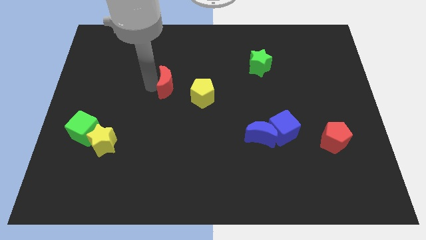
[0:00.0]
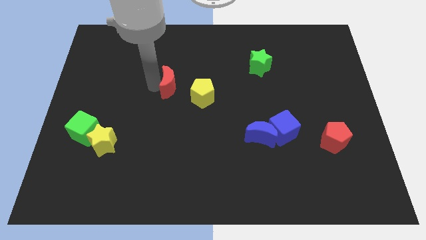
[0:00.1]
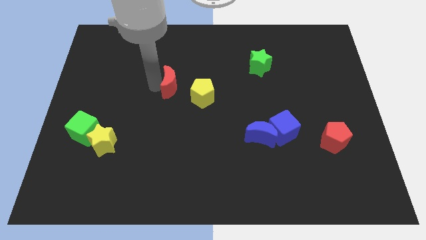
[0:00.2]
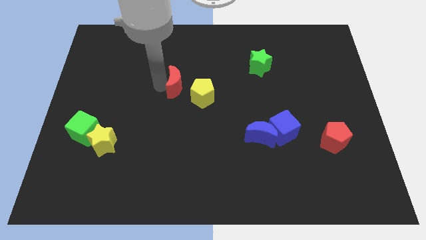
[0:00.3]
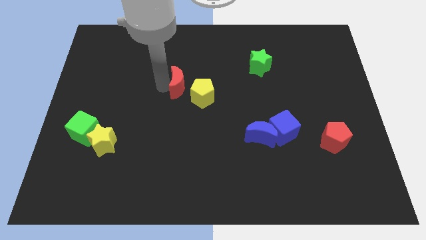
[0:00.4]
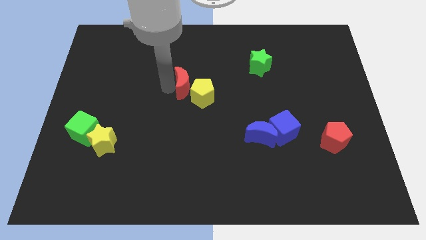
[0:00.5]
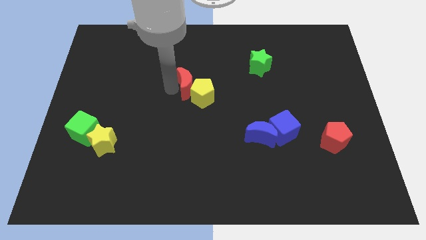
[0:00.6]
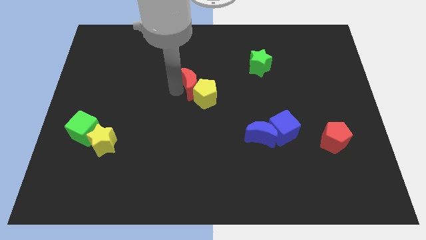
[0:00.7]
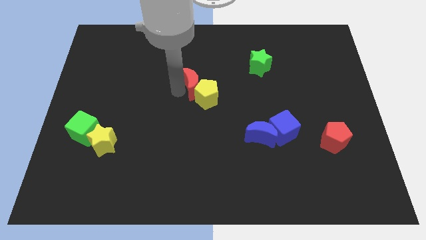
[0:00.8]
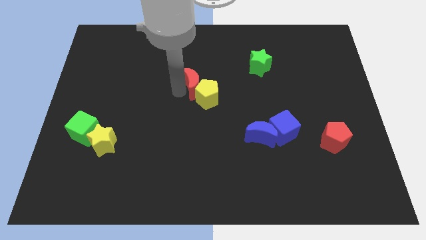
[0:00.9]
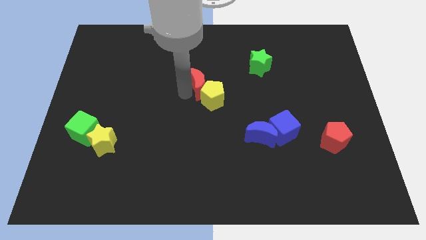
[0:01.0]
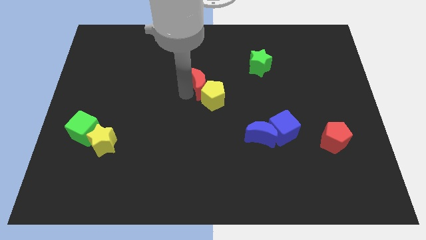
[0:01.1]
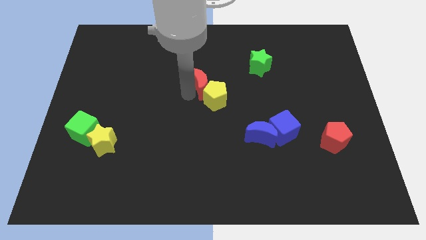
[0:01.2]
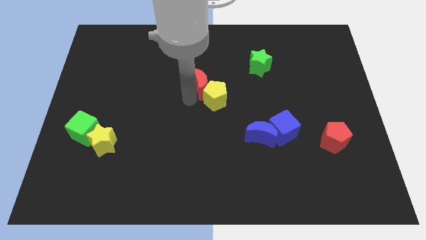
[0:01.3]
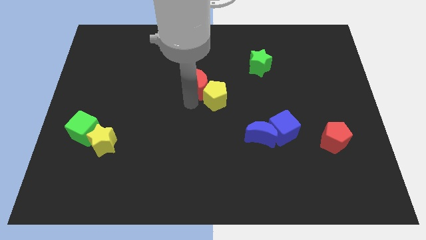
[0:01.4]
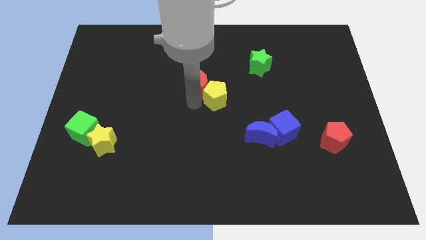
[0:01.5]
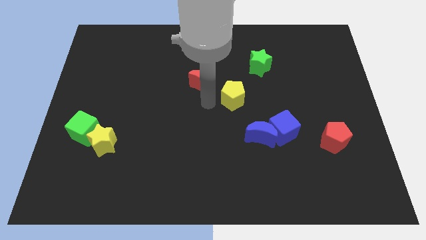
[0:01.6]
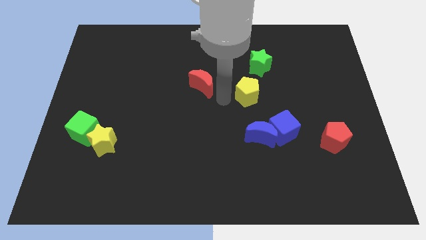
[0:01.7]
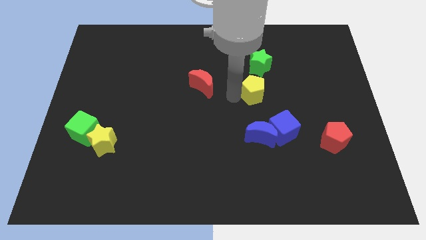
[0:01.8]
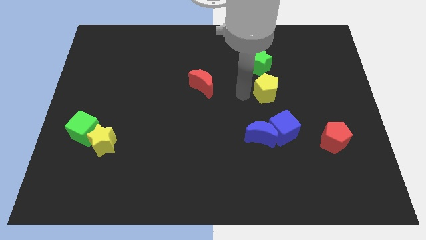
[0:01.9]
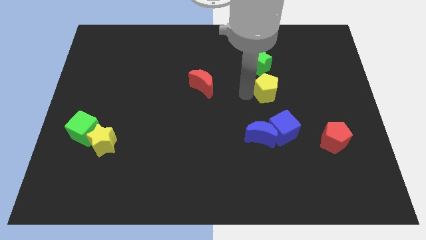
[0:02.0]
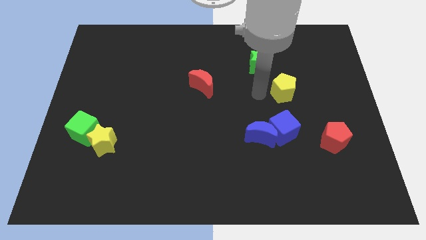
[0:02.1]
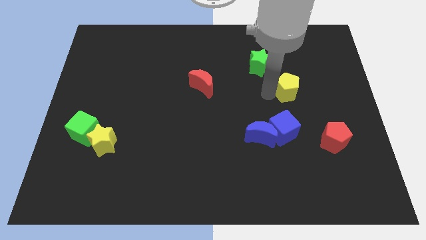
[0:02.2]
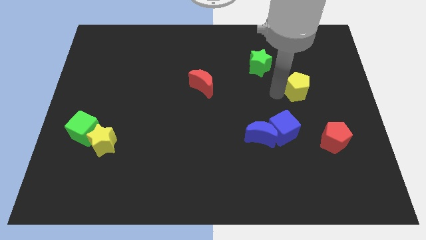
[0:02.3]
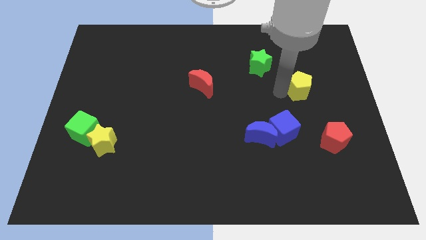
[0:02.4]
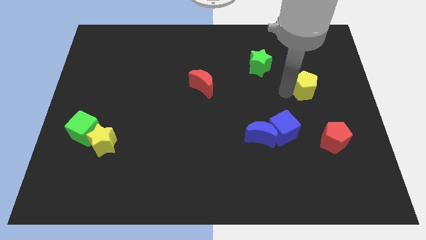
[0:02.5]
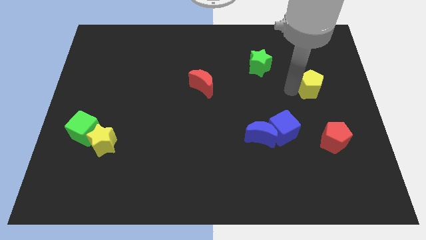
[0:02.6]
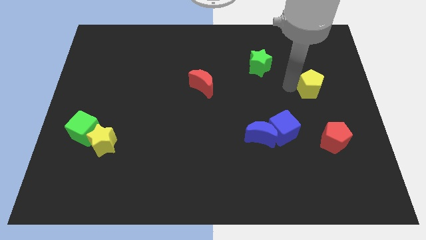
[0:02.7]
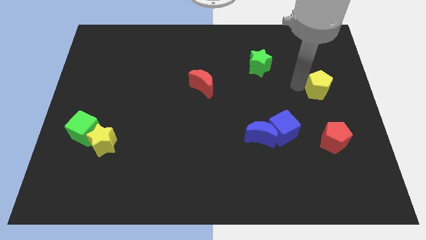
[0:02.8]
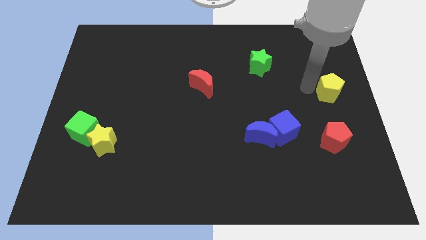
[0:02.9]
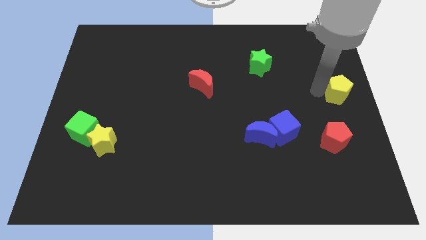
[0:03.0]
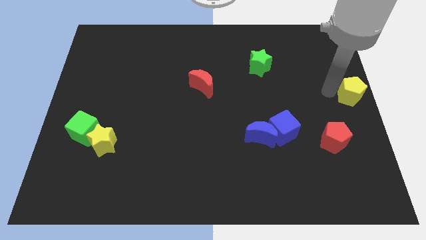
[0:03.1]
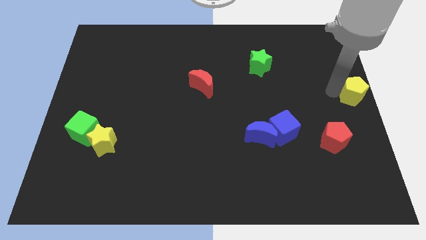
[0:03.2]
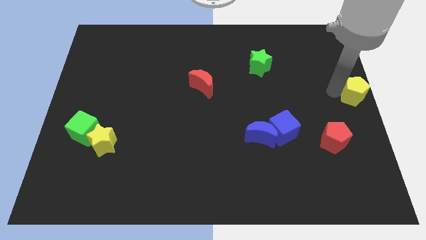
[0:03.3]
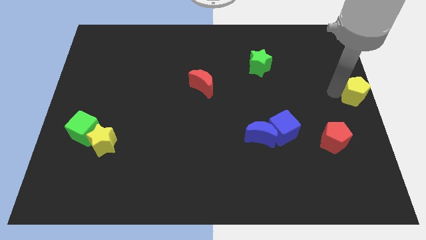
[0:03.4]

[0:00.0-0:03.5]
move the yellow pentagon to the centre right of the board

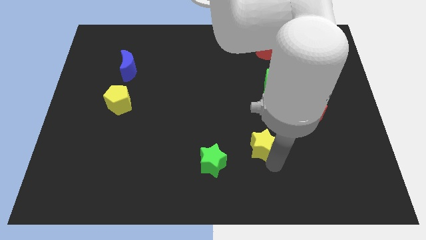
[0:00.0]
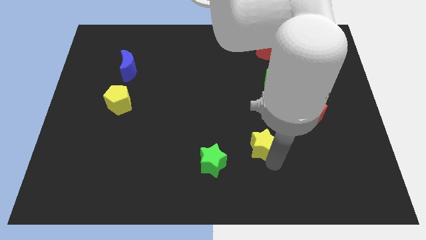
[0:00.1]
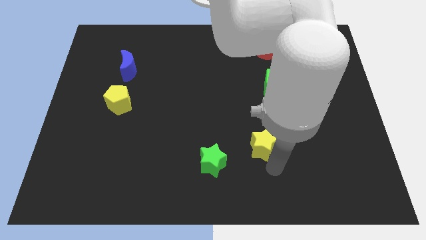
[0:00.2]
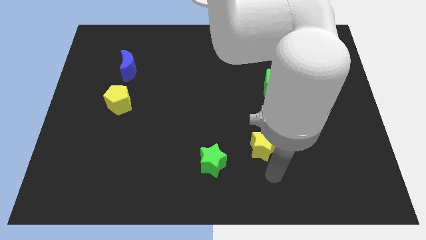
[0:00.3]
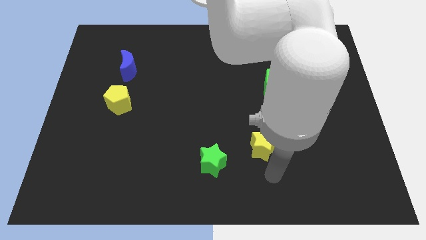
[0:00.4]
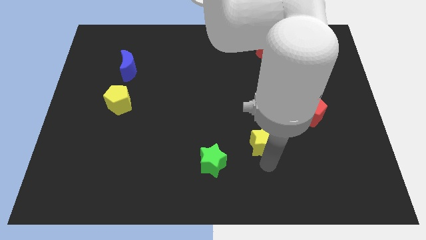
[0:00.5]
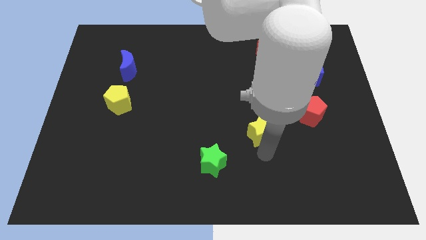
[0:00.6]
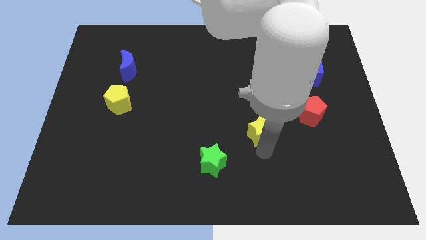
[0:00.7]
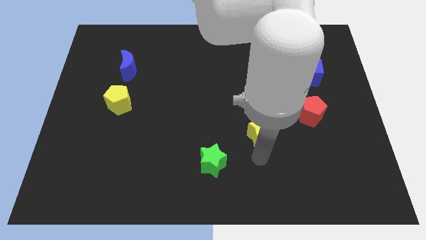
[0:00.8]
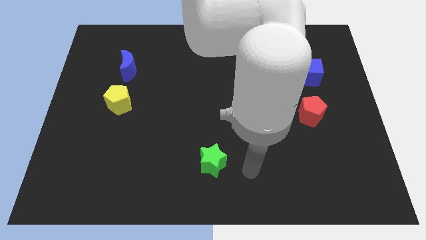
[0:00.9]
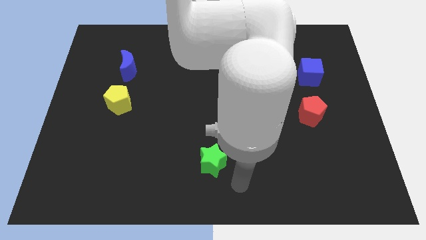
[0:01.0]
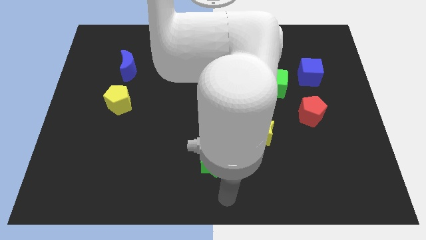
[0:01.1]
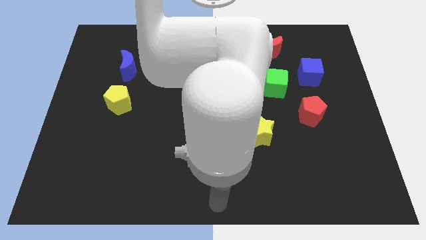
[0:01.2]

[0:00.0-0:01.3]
move the yellow star towards top of the board

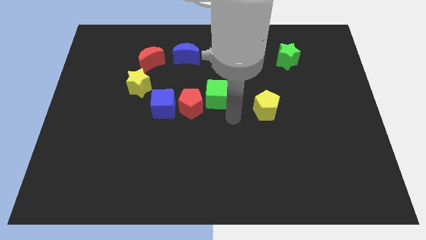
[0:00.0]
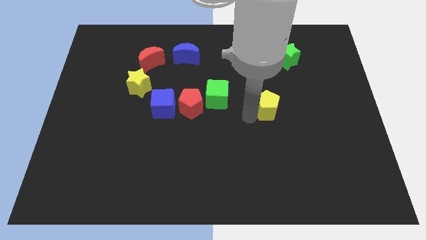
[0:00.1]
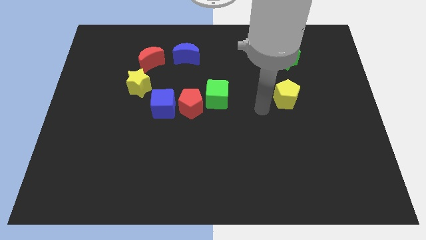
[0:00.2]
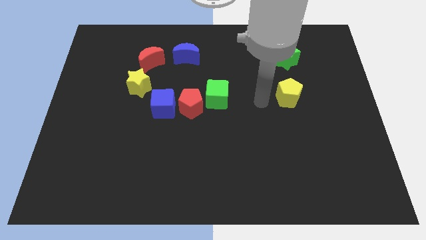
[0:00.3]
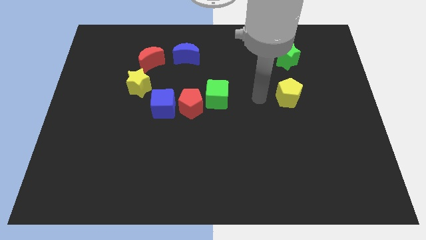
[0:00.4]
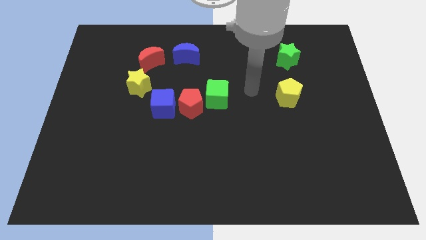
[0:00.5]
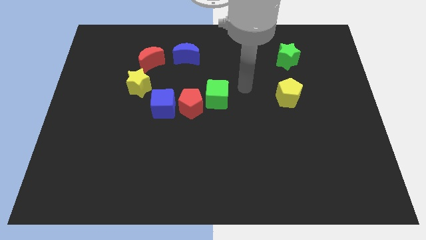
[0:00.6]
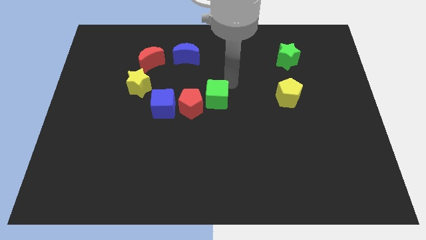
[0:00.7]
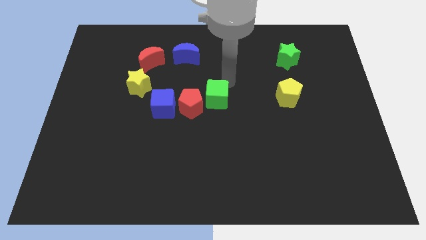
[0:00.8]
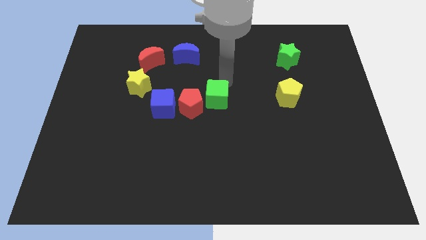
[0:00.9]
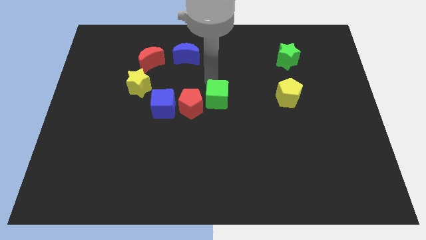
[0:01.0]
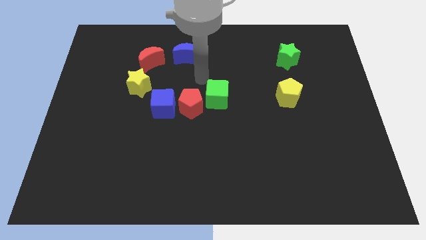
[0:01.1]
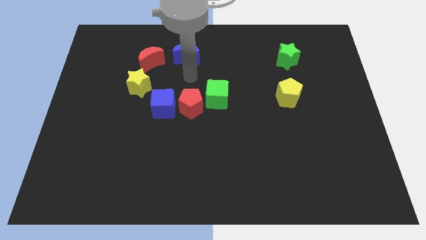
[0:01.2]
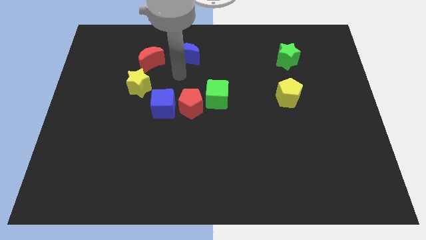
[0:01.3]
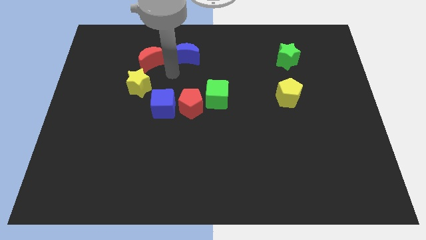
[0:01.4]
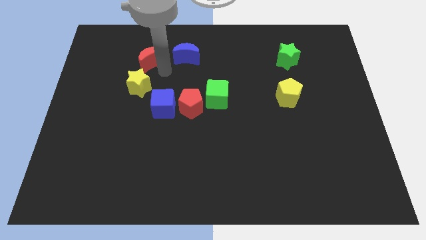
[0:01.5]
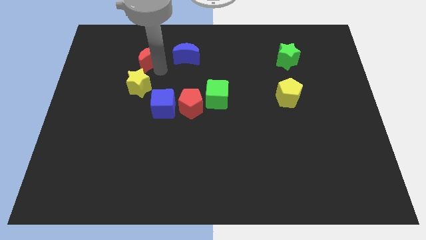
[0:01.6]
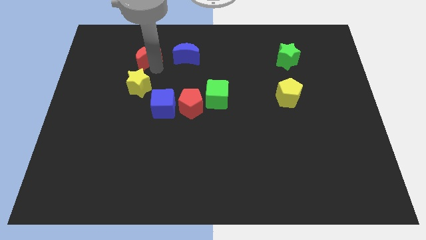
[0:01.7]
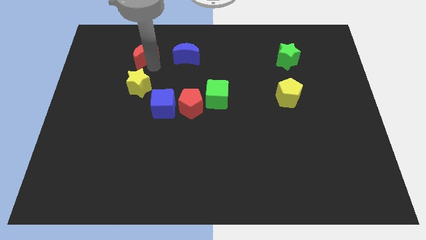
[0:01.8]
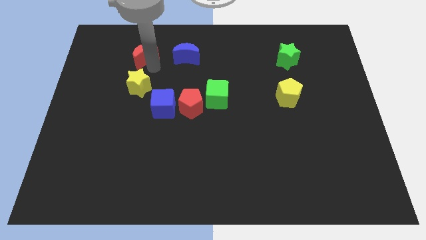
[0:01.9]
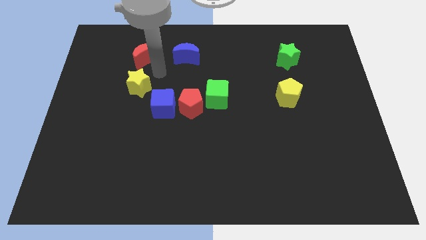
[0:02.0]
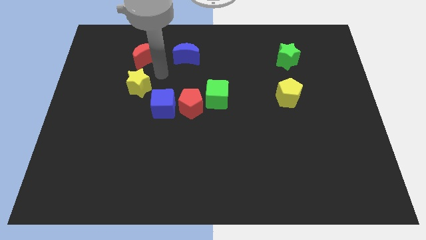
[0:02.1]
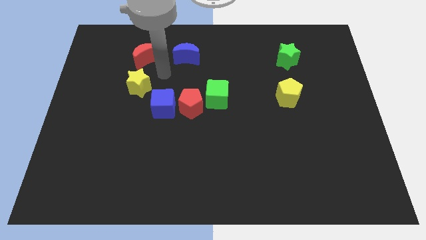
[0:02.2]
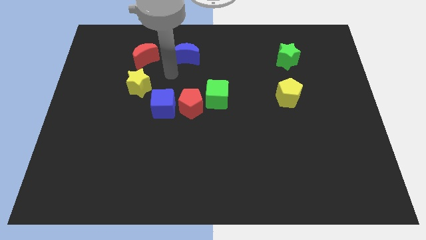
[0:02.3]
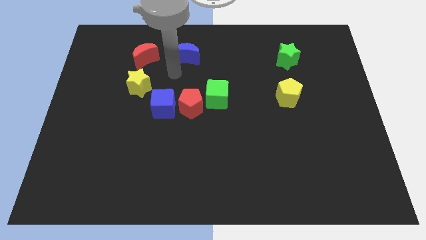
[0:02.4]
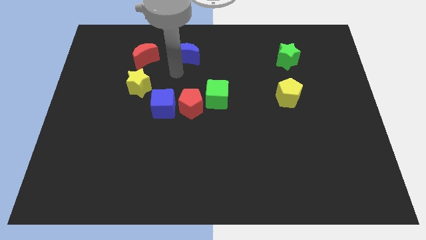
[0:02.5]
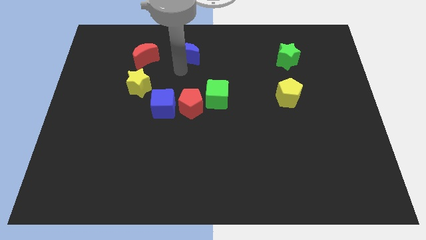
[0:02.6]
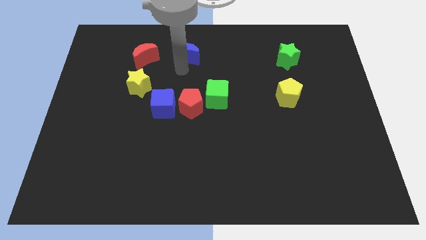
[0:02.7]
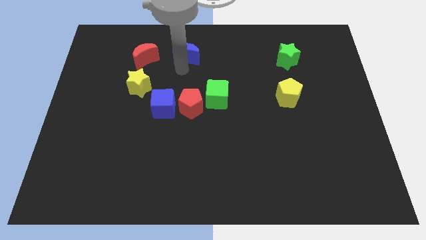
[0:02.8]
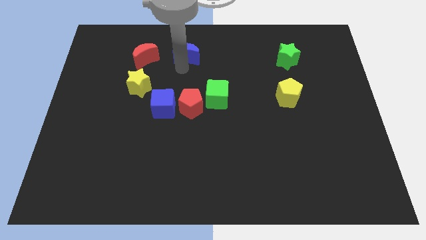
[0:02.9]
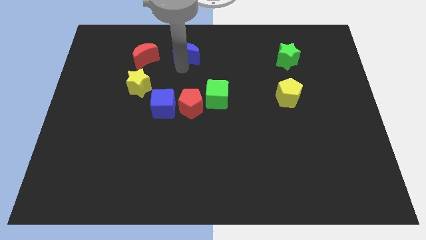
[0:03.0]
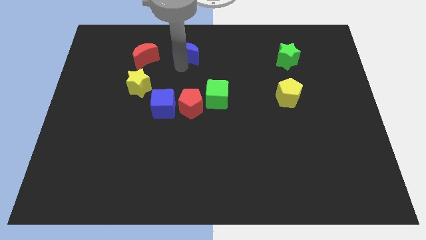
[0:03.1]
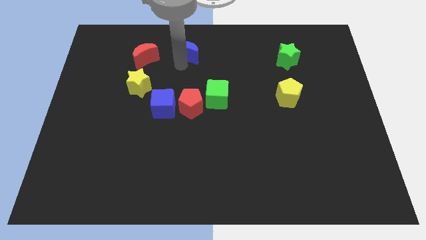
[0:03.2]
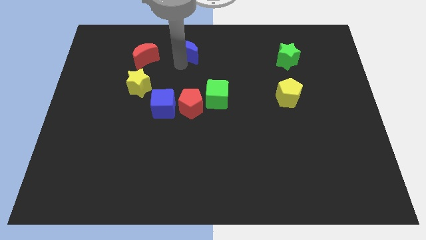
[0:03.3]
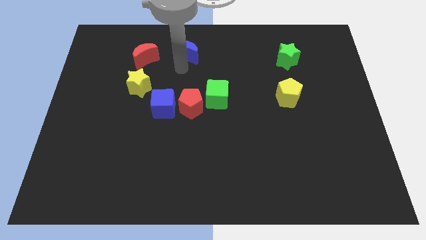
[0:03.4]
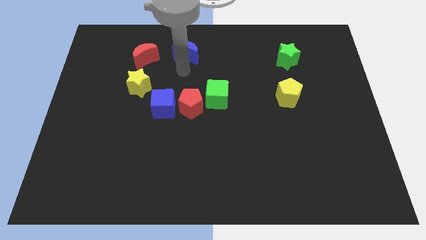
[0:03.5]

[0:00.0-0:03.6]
place the yellow pentagon to the bottom of green star

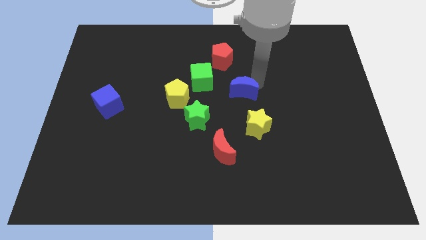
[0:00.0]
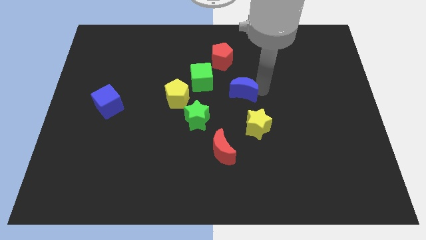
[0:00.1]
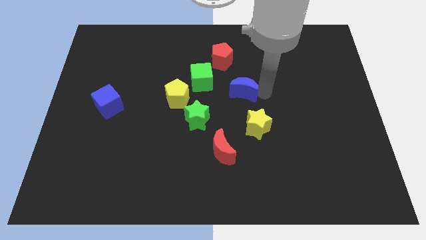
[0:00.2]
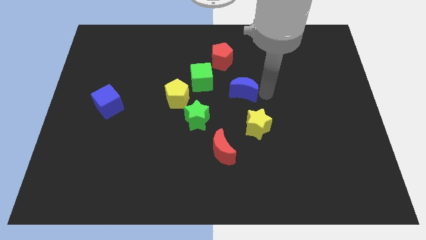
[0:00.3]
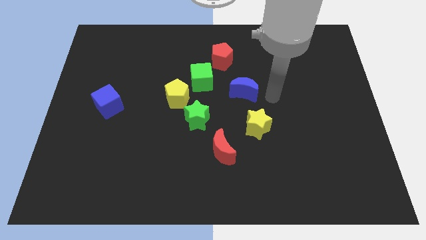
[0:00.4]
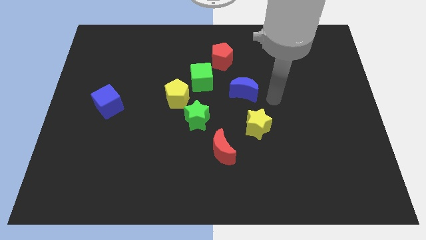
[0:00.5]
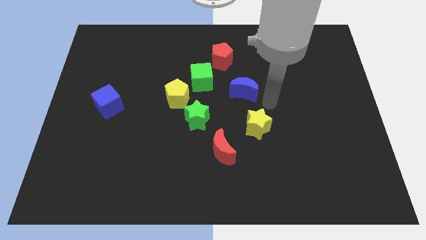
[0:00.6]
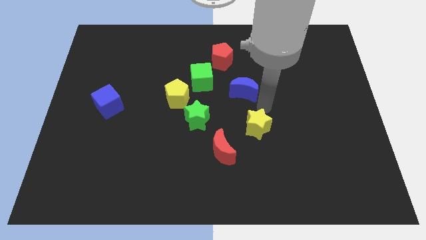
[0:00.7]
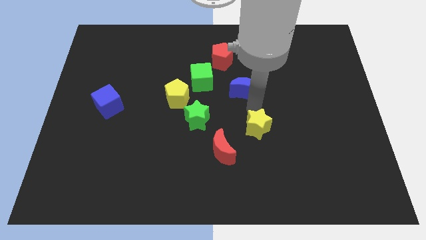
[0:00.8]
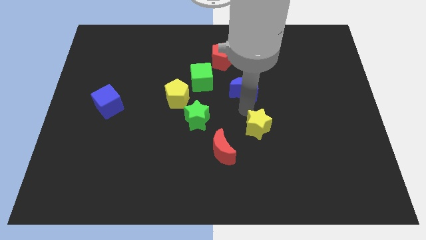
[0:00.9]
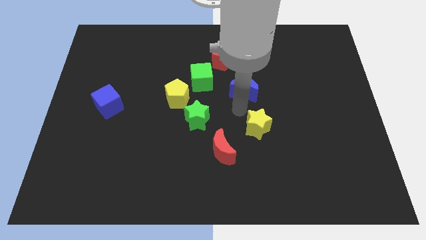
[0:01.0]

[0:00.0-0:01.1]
place the arm below the blue moon
